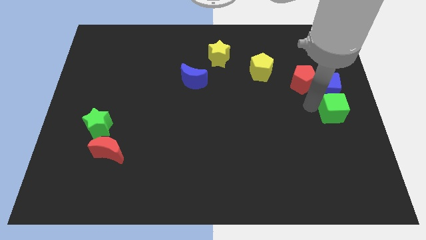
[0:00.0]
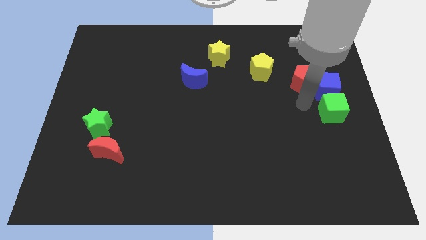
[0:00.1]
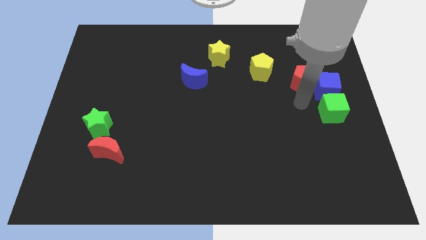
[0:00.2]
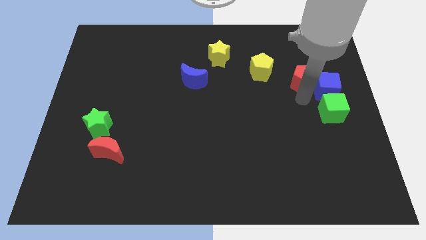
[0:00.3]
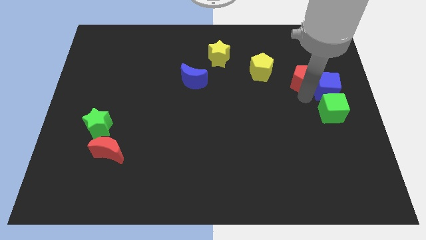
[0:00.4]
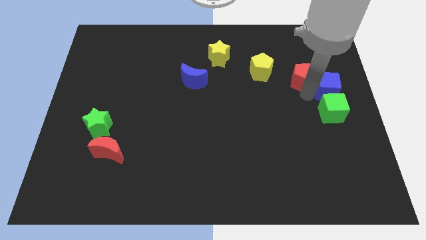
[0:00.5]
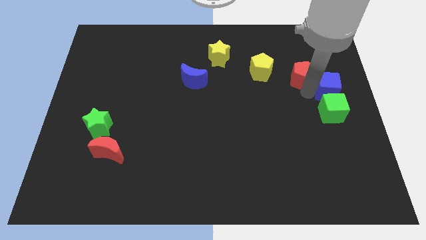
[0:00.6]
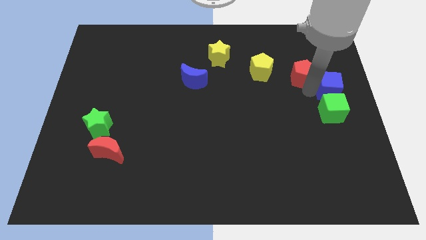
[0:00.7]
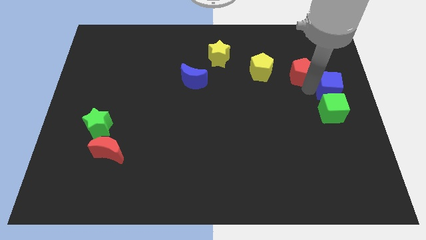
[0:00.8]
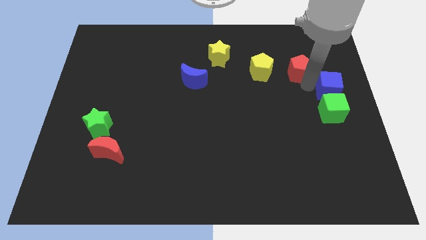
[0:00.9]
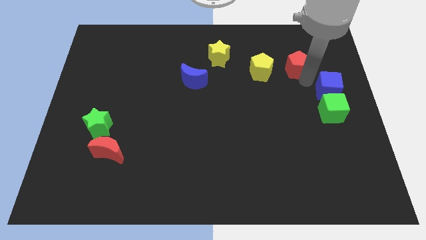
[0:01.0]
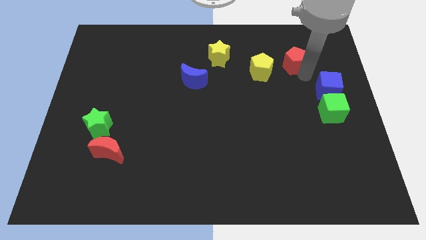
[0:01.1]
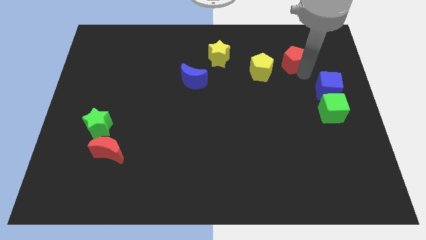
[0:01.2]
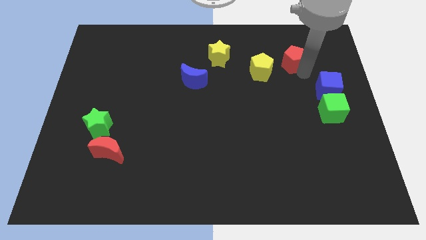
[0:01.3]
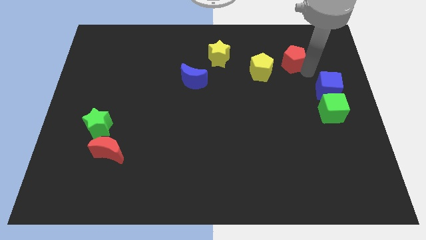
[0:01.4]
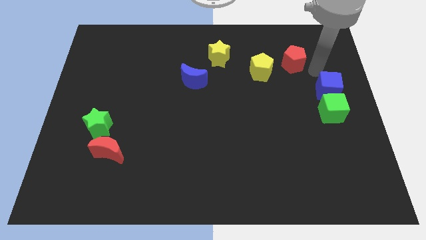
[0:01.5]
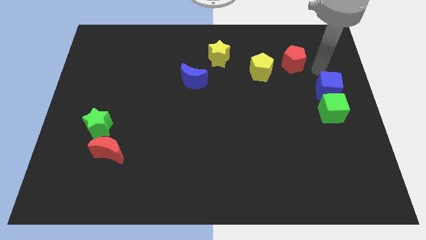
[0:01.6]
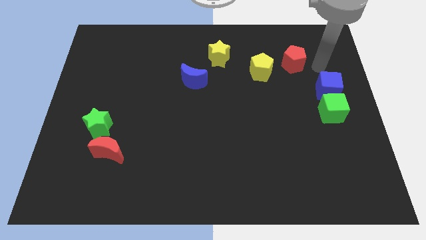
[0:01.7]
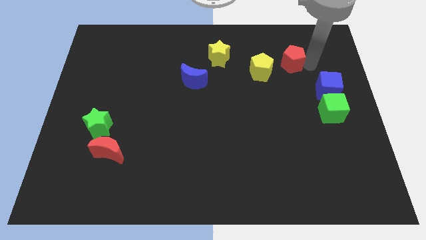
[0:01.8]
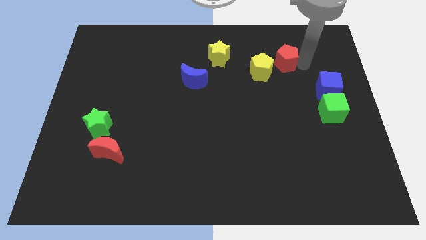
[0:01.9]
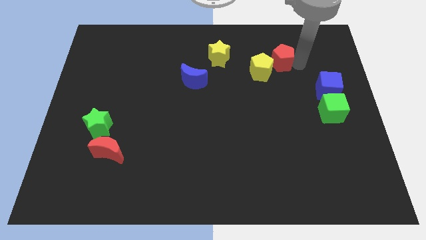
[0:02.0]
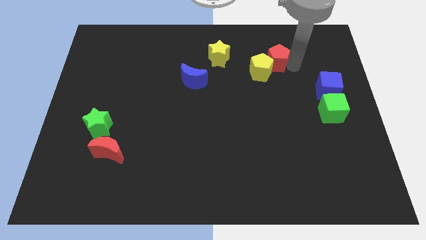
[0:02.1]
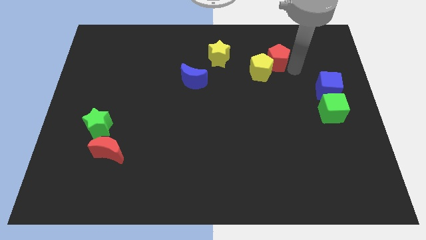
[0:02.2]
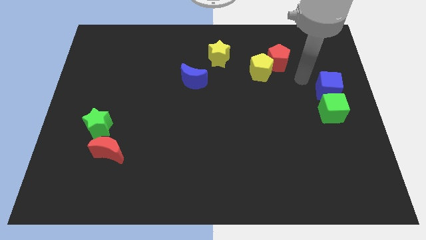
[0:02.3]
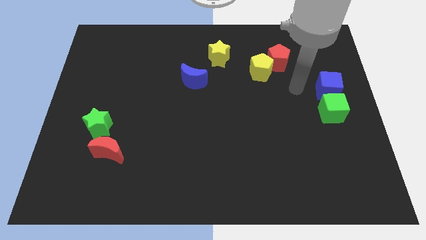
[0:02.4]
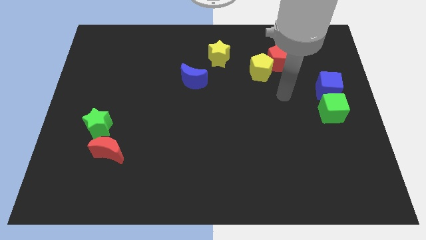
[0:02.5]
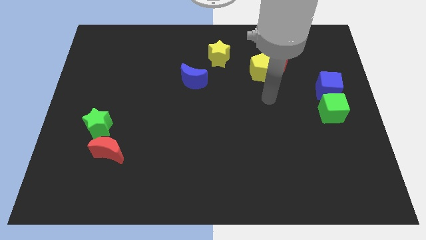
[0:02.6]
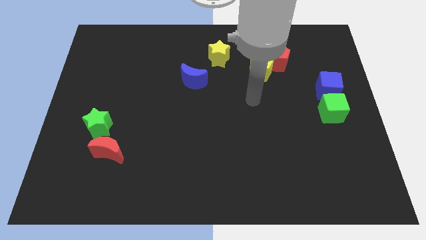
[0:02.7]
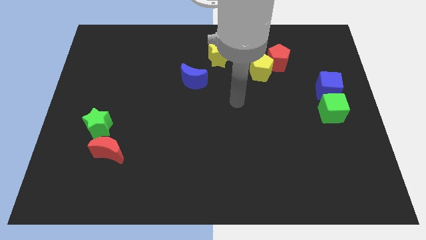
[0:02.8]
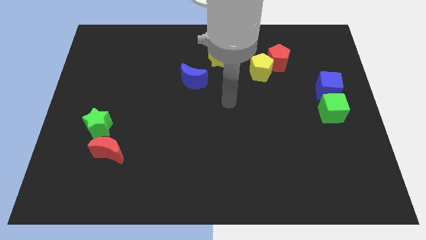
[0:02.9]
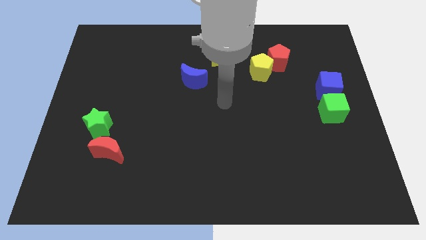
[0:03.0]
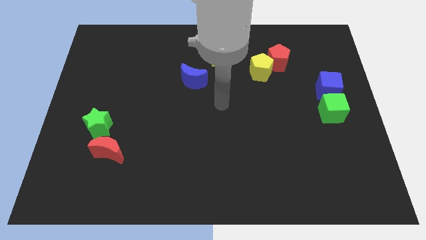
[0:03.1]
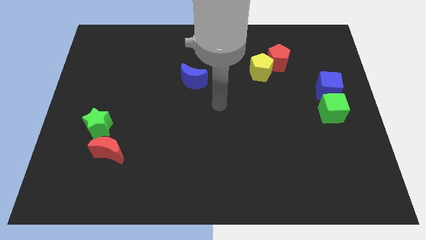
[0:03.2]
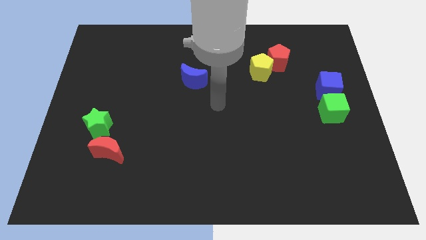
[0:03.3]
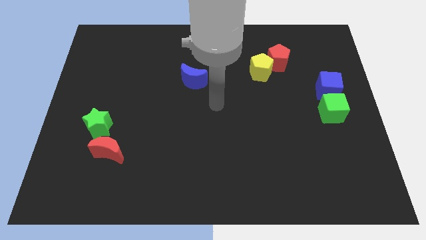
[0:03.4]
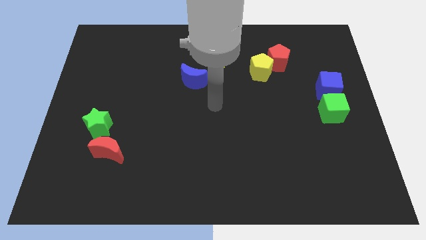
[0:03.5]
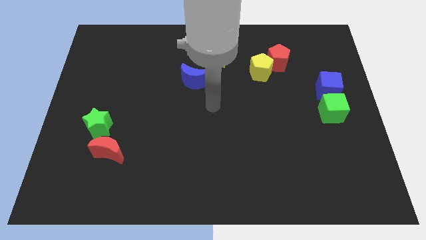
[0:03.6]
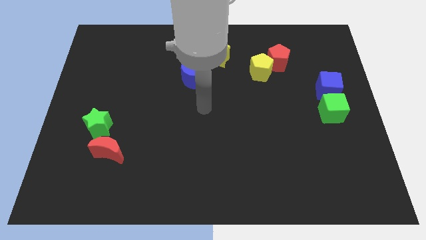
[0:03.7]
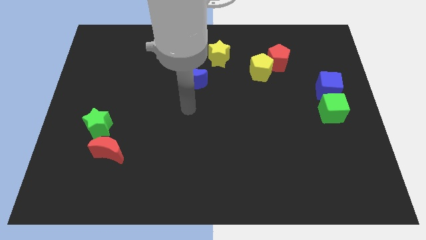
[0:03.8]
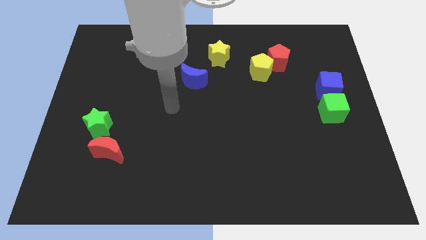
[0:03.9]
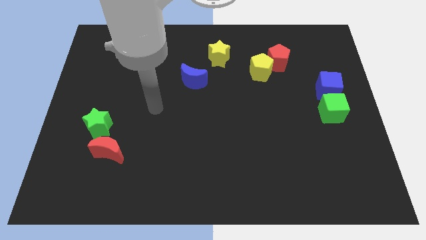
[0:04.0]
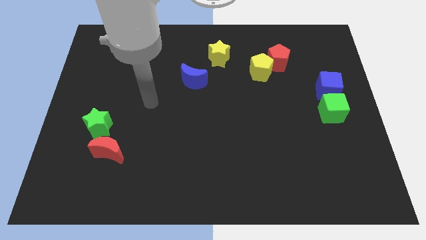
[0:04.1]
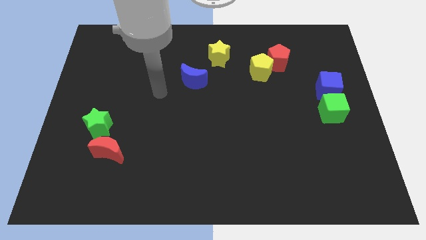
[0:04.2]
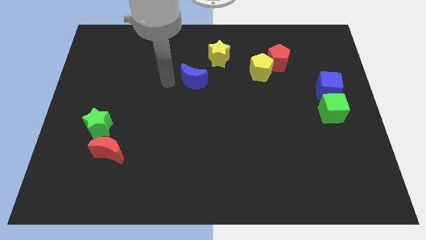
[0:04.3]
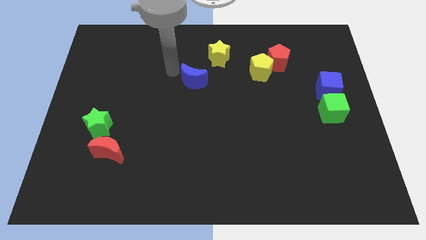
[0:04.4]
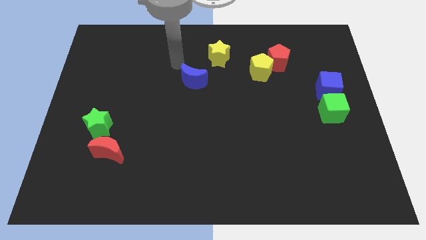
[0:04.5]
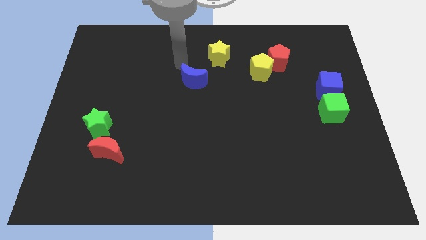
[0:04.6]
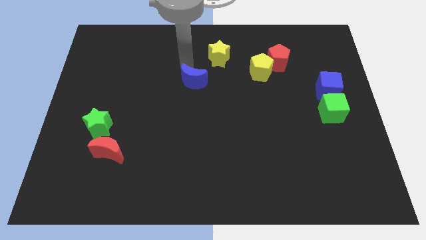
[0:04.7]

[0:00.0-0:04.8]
push the red pentagon diagonally top right to the yellow pentagon

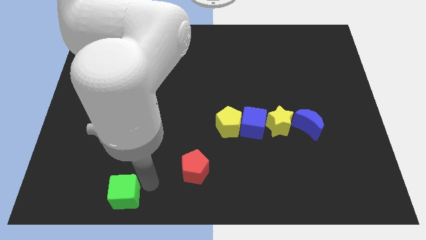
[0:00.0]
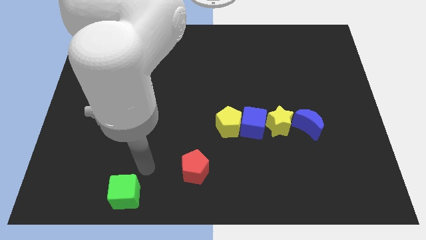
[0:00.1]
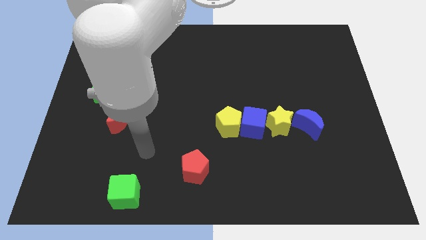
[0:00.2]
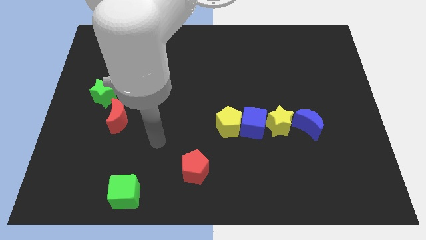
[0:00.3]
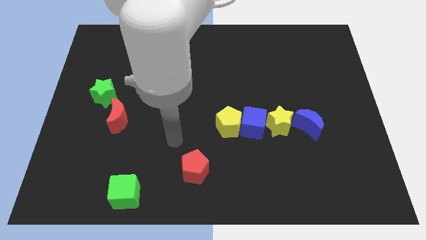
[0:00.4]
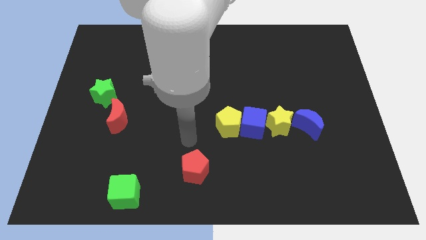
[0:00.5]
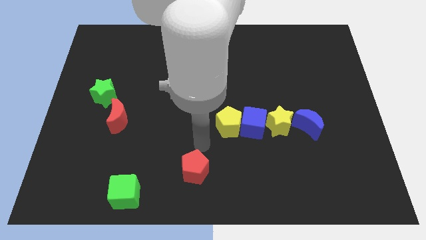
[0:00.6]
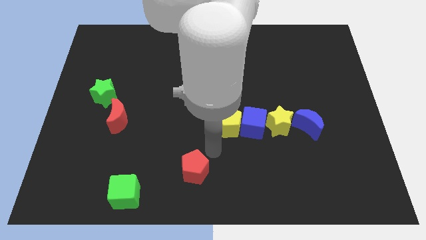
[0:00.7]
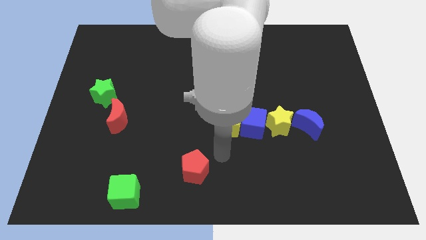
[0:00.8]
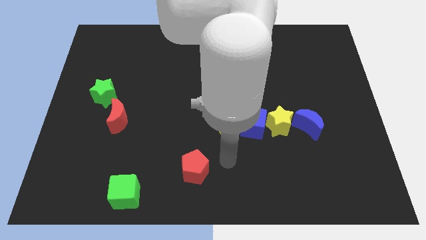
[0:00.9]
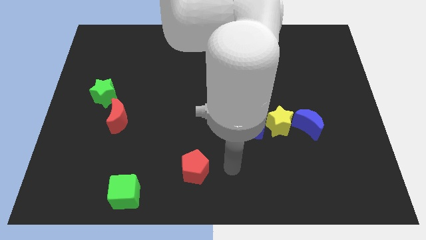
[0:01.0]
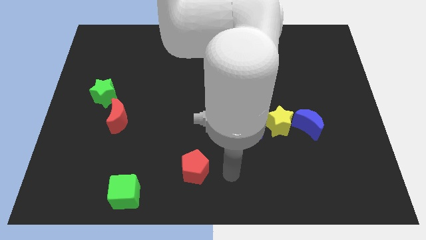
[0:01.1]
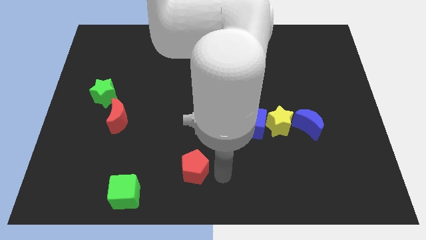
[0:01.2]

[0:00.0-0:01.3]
point the arm to the right of the red pentagon

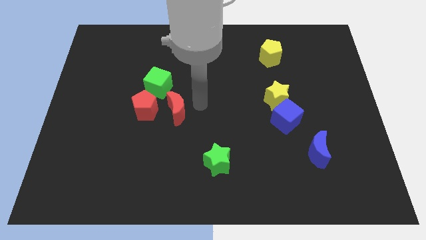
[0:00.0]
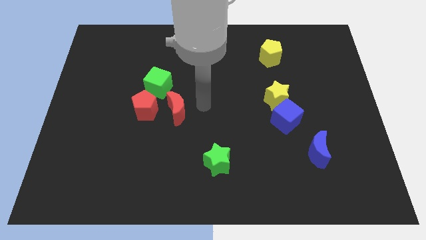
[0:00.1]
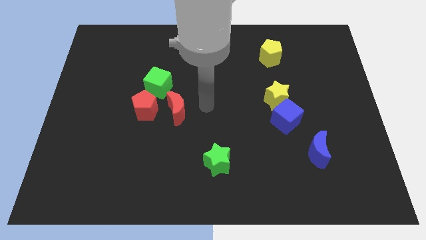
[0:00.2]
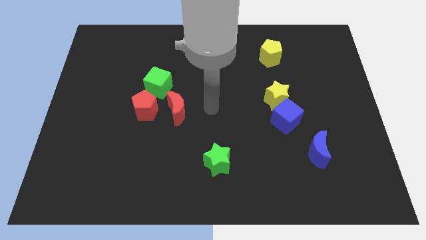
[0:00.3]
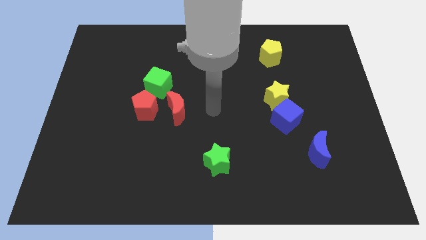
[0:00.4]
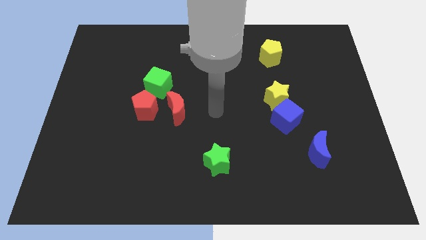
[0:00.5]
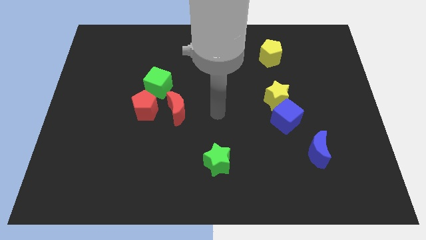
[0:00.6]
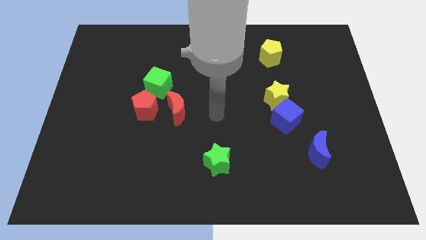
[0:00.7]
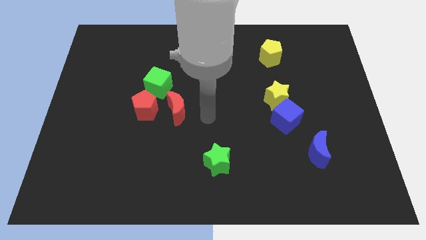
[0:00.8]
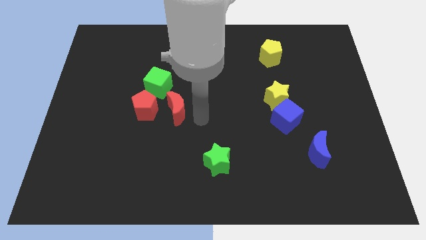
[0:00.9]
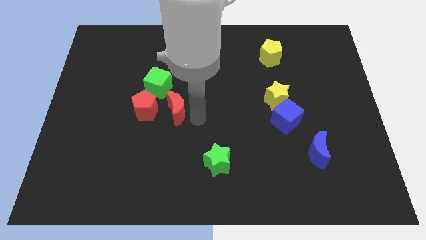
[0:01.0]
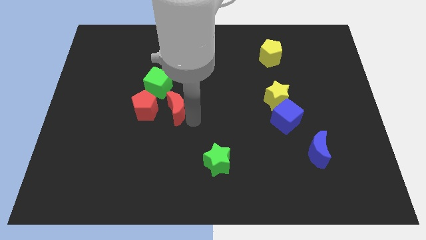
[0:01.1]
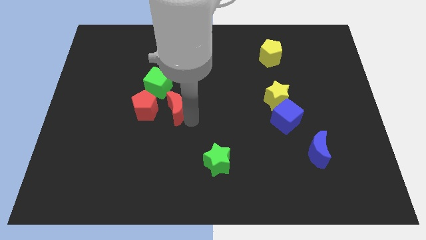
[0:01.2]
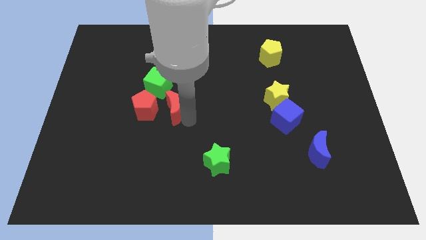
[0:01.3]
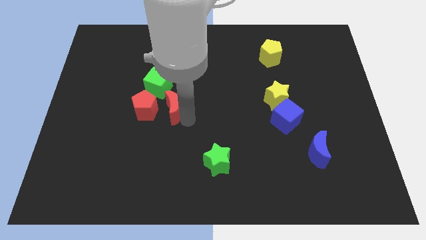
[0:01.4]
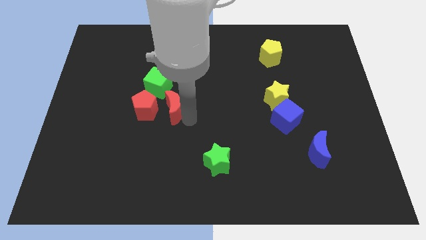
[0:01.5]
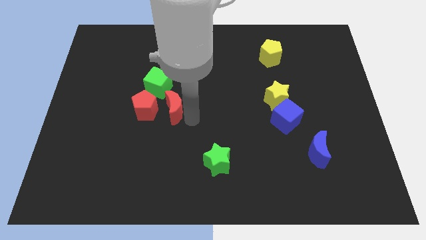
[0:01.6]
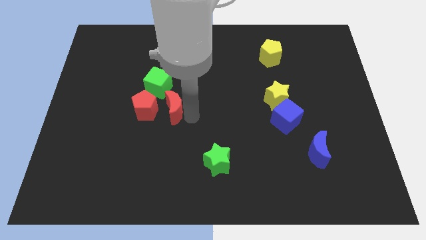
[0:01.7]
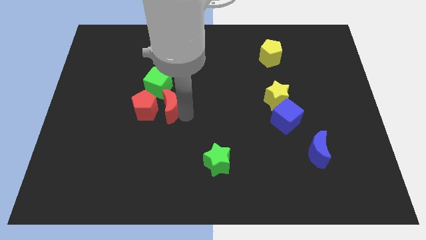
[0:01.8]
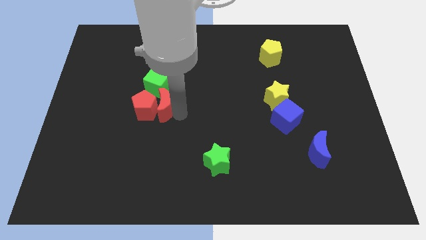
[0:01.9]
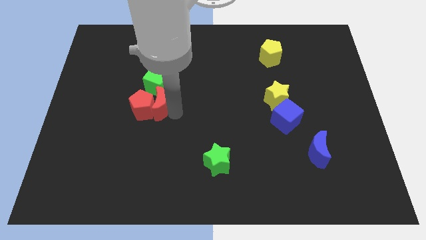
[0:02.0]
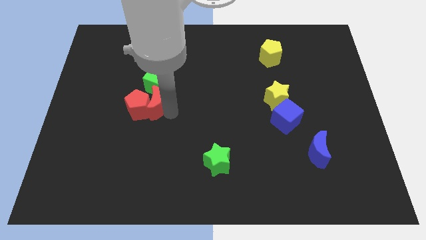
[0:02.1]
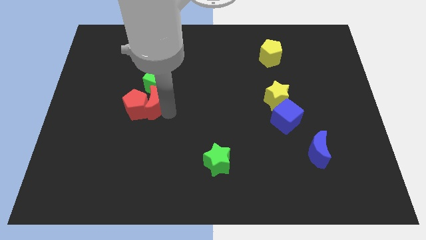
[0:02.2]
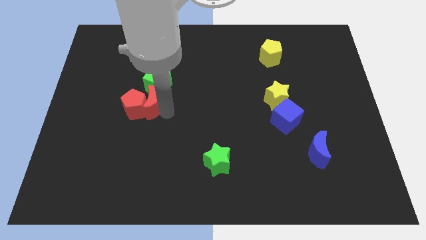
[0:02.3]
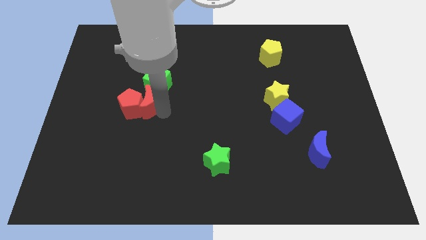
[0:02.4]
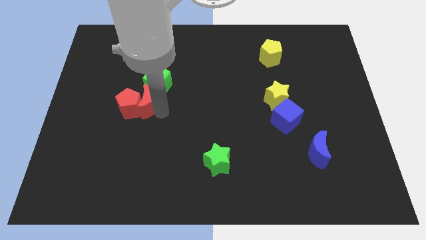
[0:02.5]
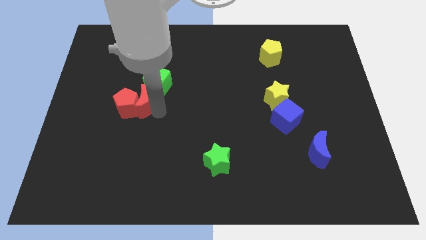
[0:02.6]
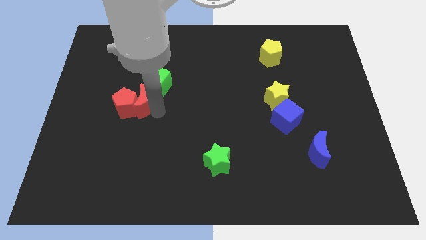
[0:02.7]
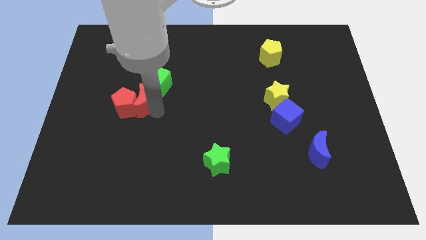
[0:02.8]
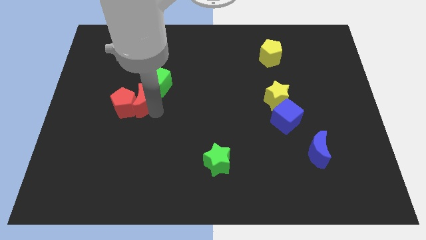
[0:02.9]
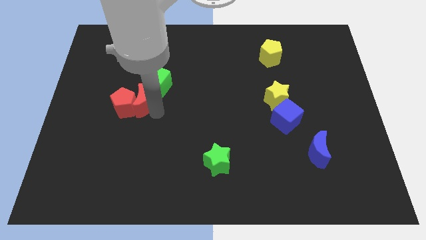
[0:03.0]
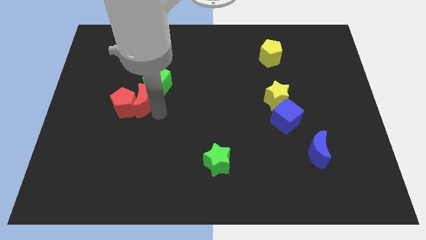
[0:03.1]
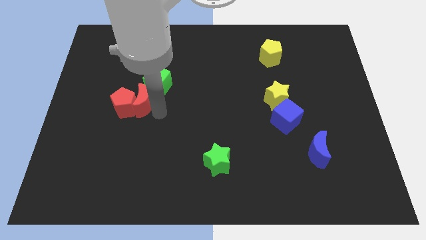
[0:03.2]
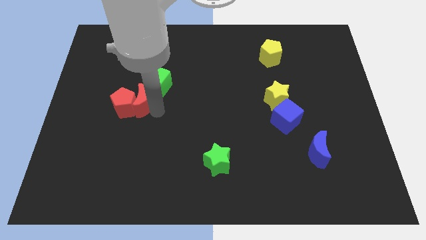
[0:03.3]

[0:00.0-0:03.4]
move the red pentagon and red moon to the left
